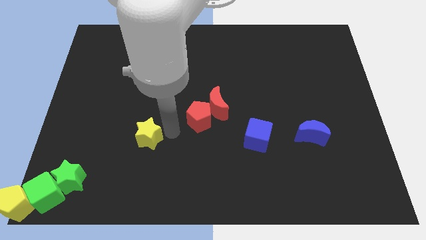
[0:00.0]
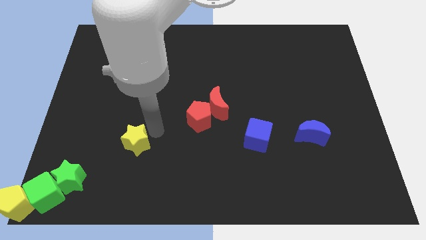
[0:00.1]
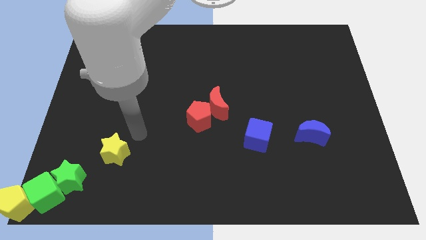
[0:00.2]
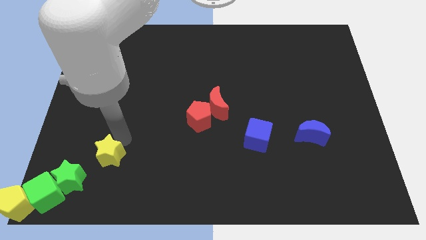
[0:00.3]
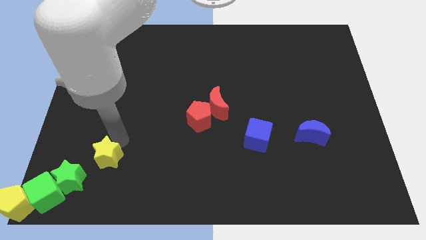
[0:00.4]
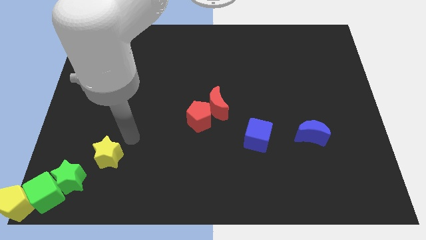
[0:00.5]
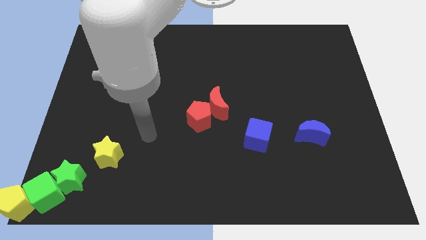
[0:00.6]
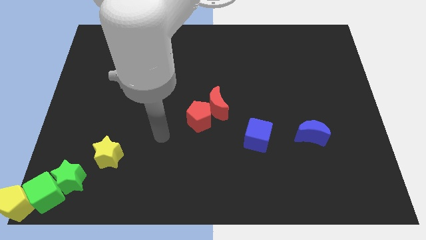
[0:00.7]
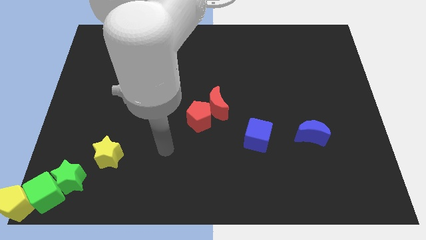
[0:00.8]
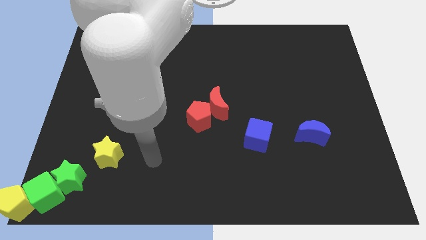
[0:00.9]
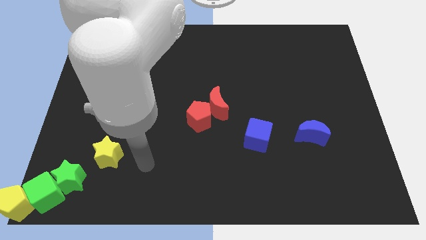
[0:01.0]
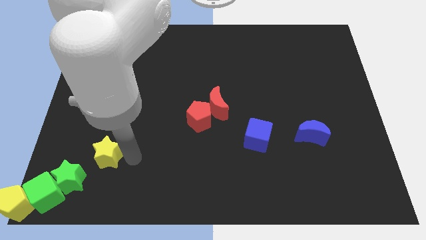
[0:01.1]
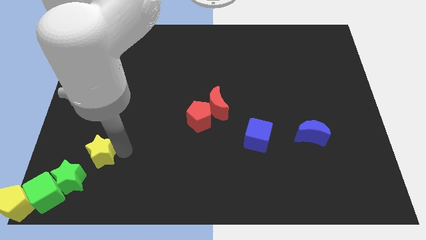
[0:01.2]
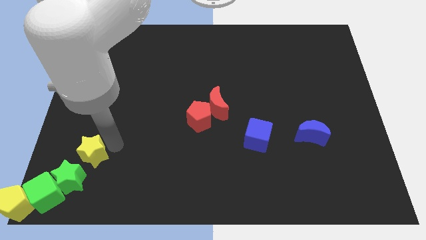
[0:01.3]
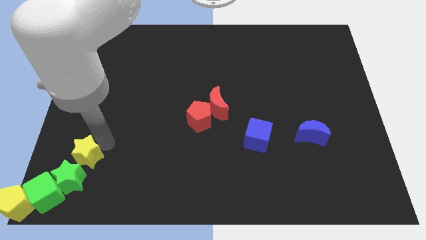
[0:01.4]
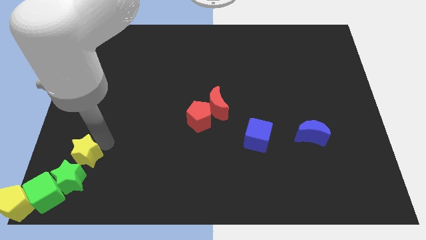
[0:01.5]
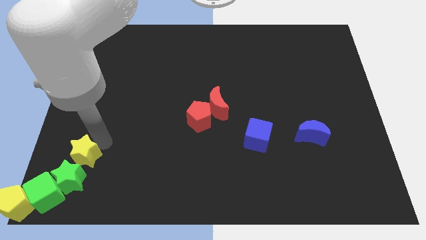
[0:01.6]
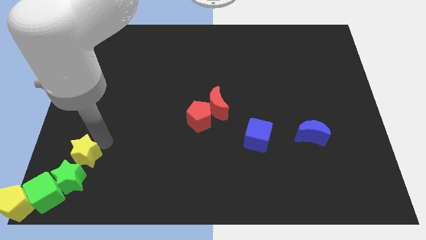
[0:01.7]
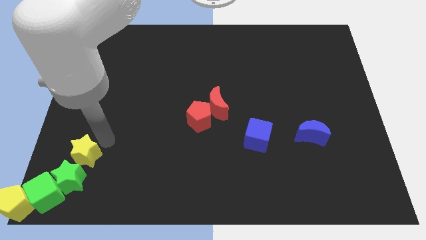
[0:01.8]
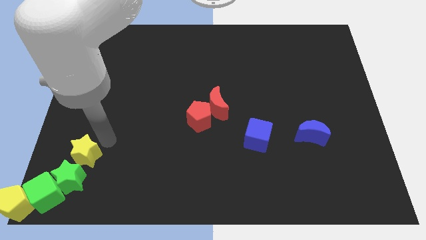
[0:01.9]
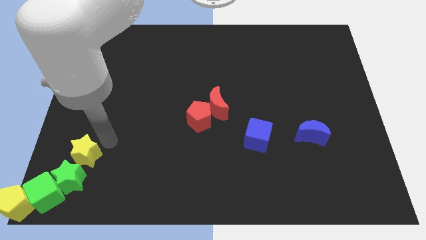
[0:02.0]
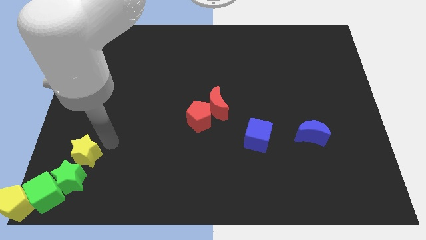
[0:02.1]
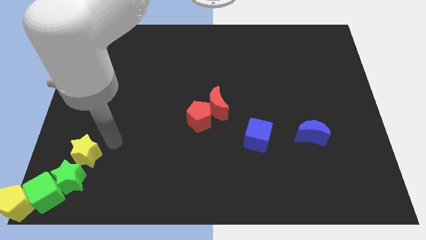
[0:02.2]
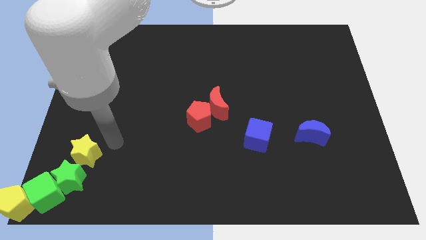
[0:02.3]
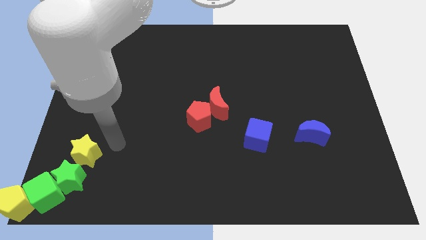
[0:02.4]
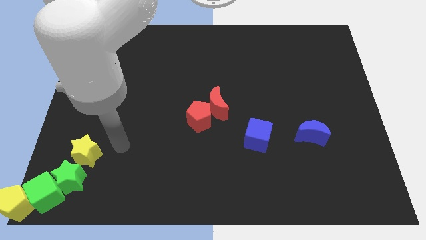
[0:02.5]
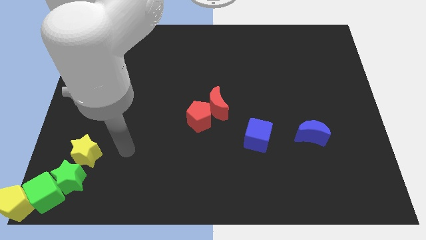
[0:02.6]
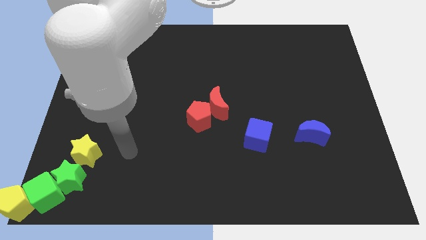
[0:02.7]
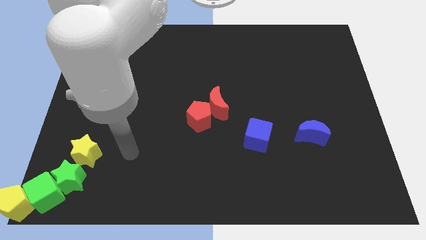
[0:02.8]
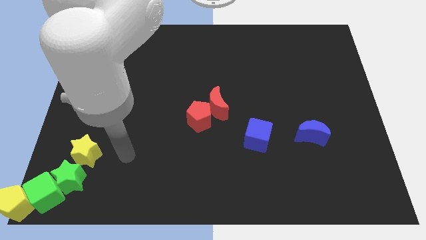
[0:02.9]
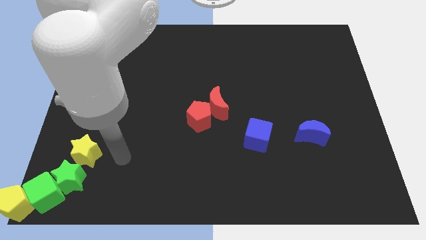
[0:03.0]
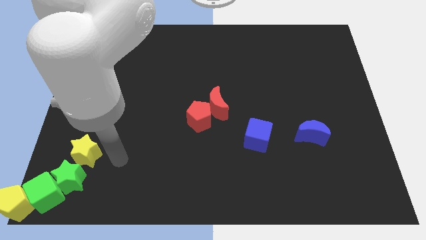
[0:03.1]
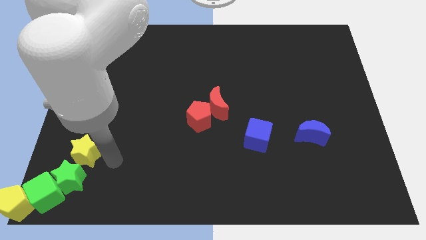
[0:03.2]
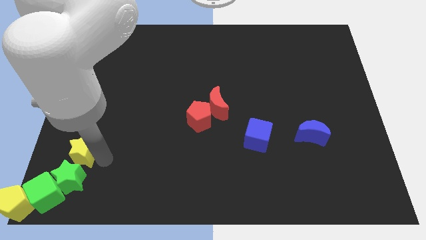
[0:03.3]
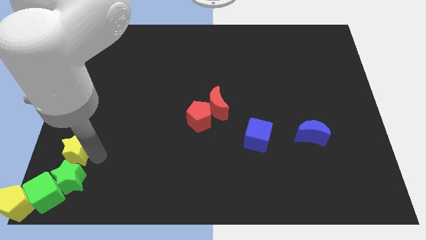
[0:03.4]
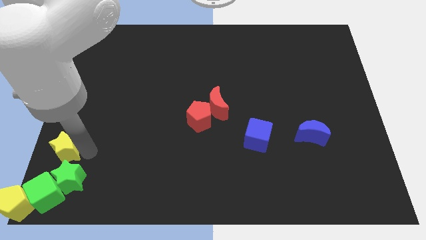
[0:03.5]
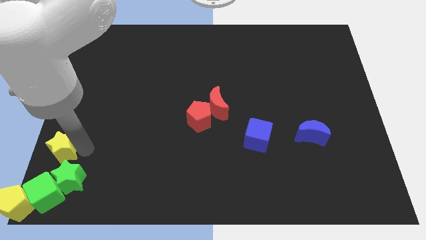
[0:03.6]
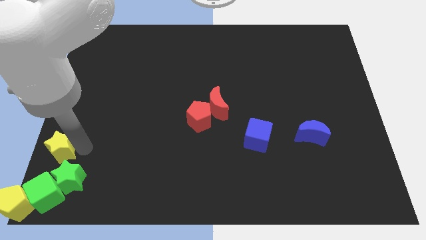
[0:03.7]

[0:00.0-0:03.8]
move the yellow star closer to the green star

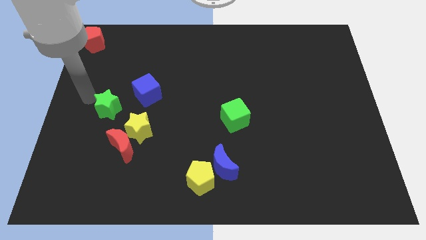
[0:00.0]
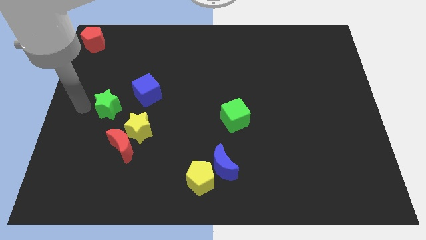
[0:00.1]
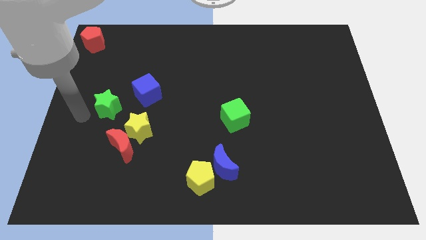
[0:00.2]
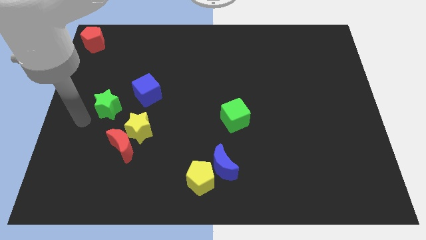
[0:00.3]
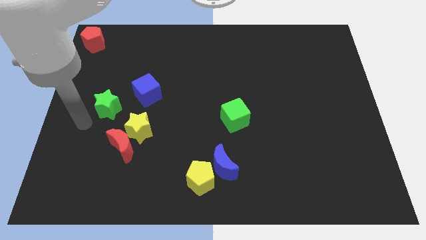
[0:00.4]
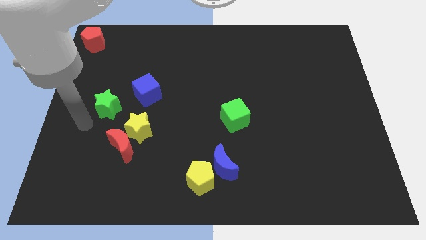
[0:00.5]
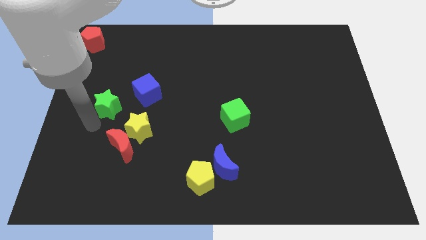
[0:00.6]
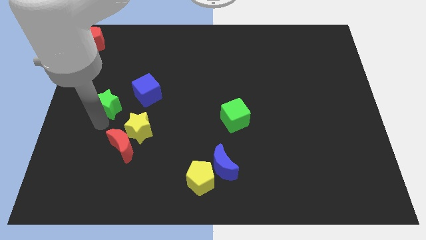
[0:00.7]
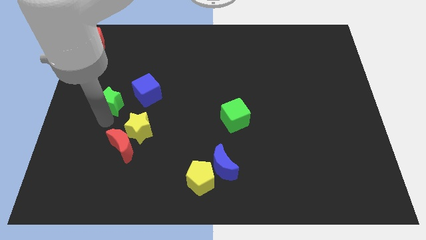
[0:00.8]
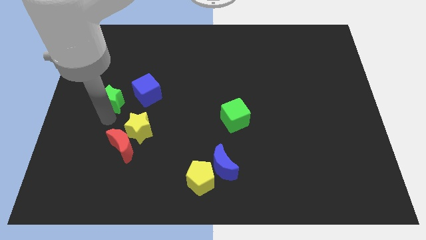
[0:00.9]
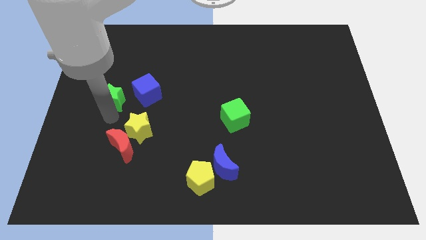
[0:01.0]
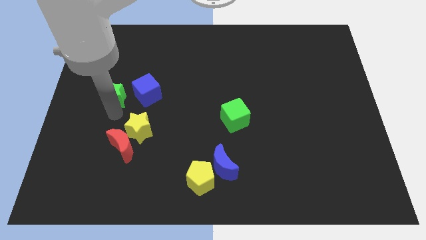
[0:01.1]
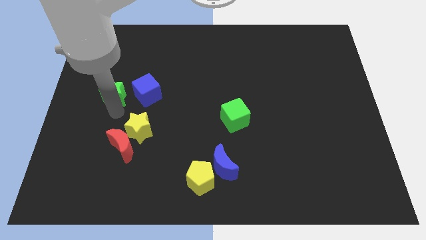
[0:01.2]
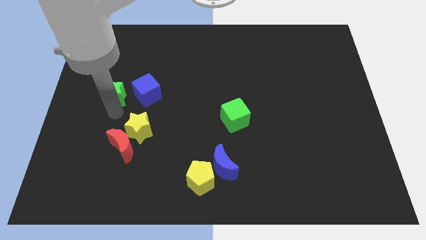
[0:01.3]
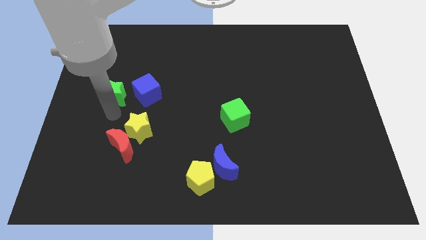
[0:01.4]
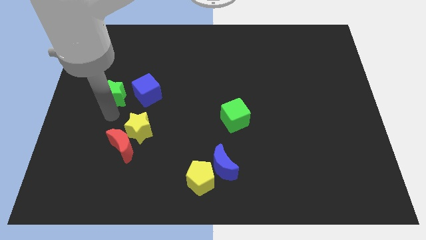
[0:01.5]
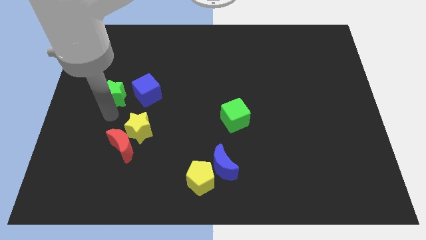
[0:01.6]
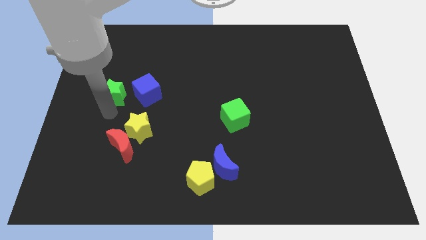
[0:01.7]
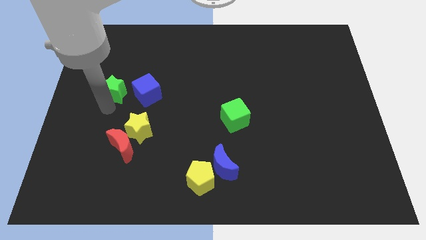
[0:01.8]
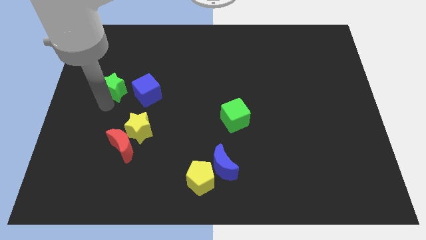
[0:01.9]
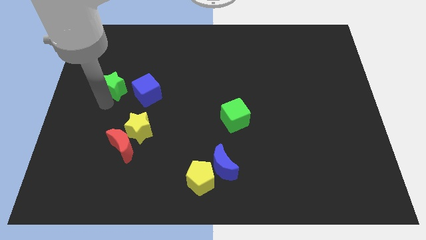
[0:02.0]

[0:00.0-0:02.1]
move green star to the left of blue cube

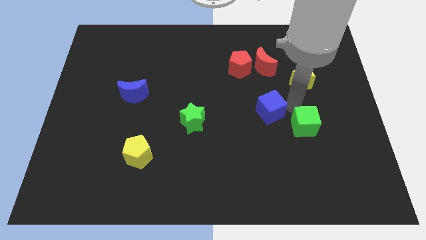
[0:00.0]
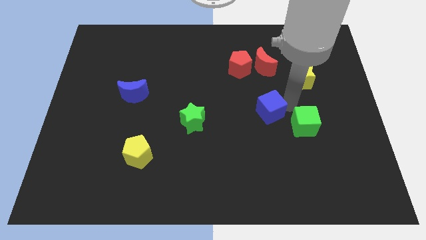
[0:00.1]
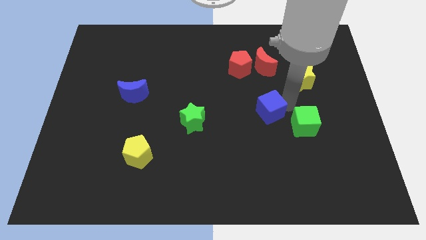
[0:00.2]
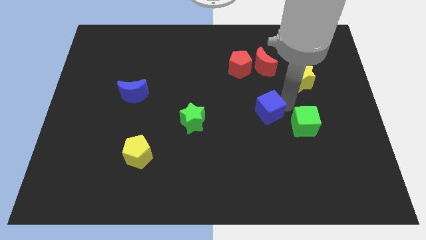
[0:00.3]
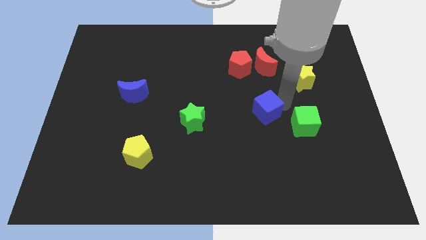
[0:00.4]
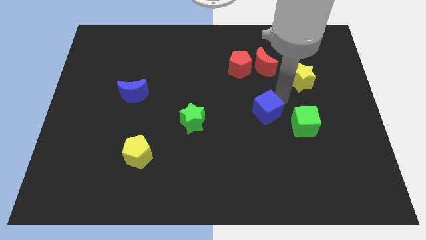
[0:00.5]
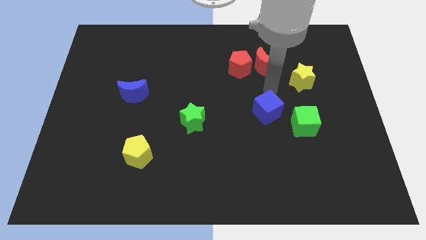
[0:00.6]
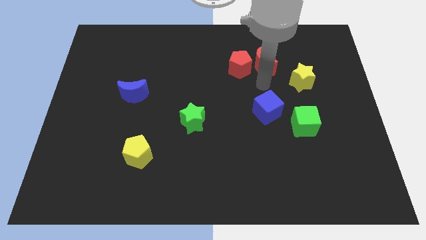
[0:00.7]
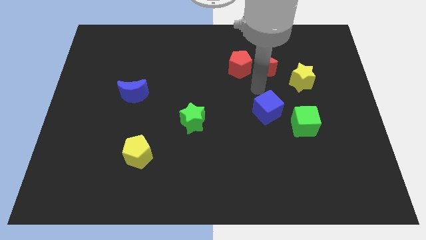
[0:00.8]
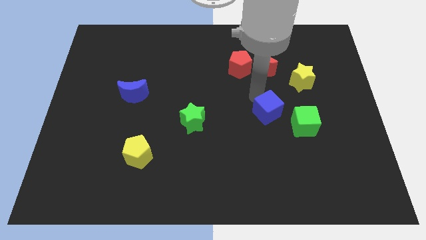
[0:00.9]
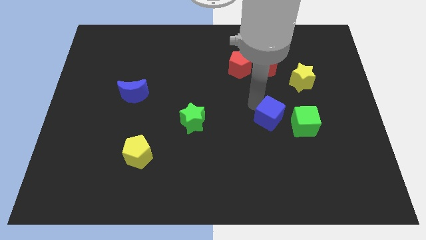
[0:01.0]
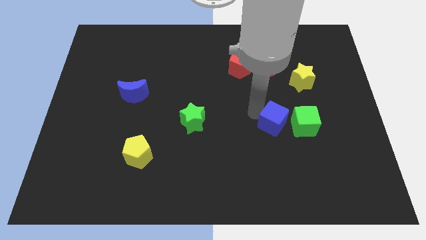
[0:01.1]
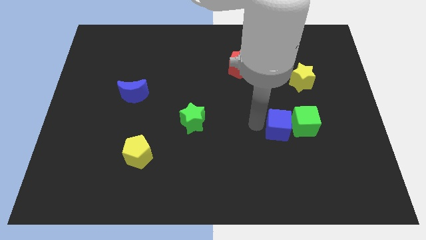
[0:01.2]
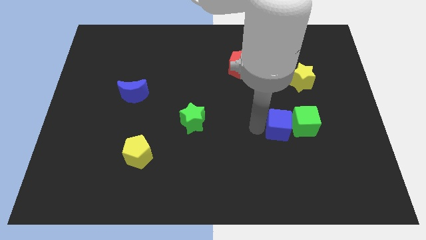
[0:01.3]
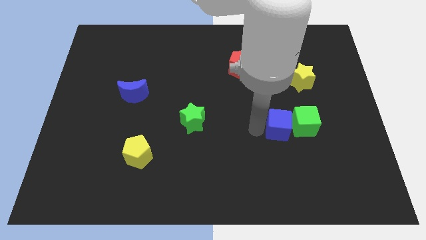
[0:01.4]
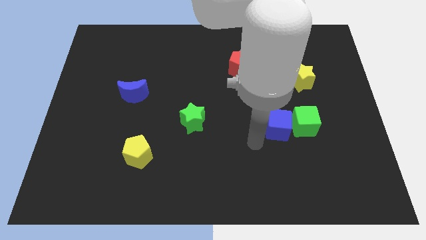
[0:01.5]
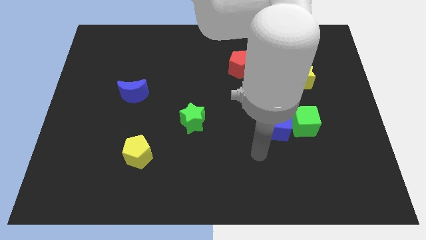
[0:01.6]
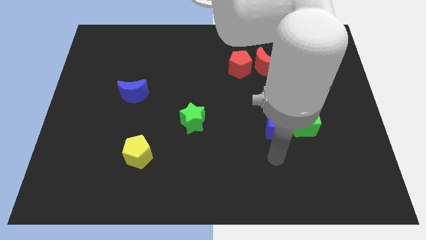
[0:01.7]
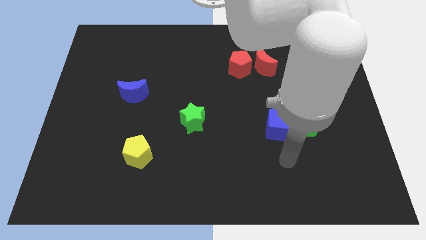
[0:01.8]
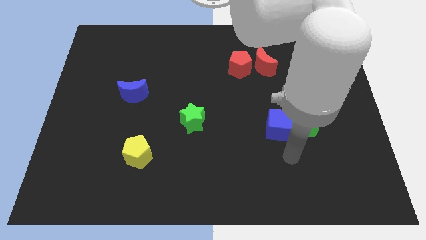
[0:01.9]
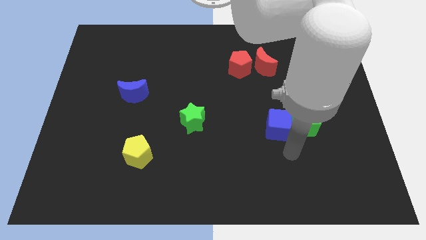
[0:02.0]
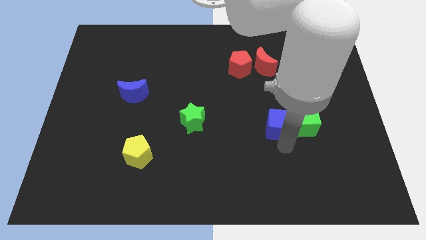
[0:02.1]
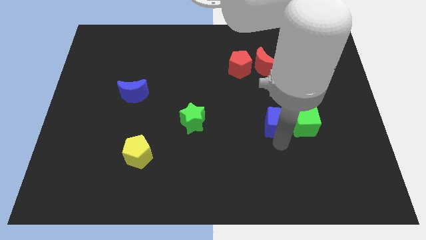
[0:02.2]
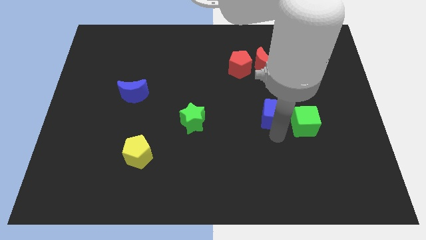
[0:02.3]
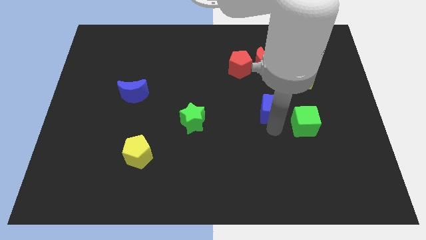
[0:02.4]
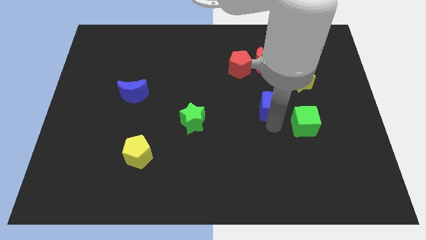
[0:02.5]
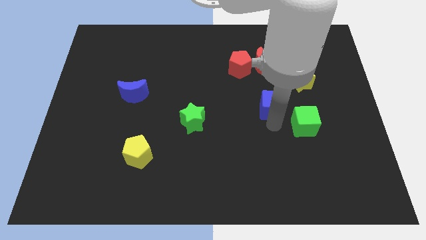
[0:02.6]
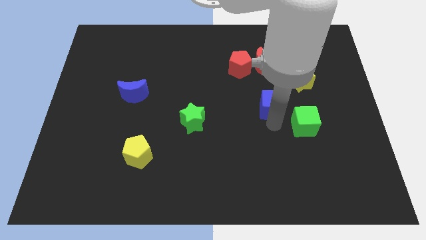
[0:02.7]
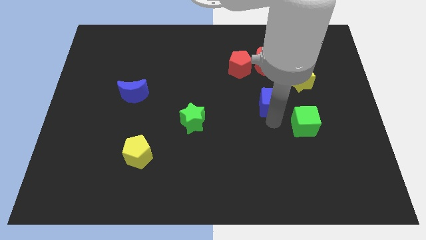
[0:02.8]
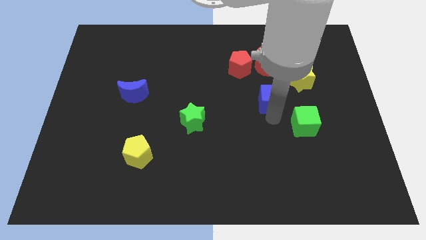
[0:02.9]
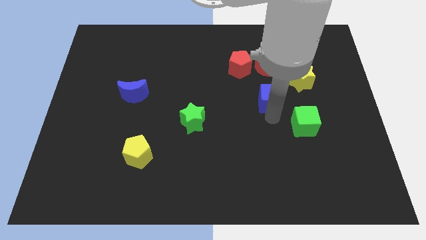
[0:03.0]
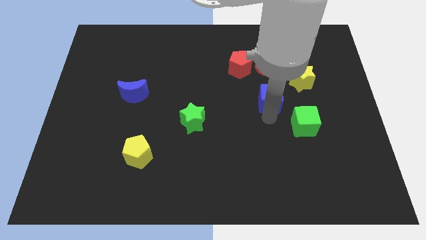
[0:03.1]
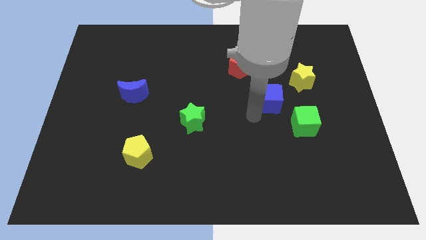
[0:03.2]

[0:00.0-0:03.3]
adjust the blue cube vertically below the red crescent
